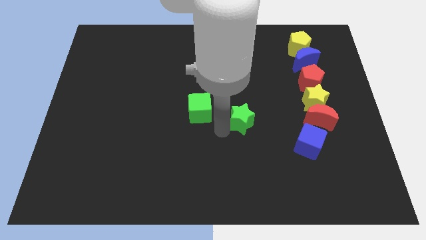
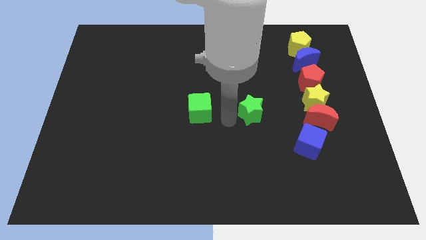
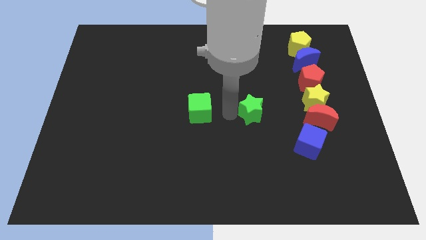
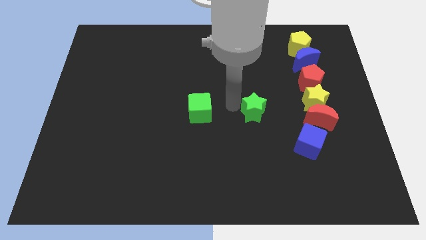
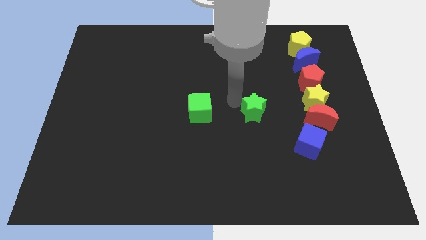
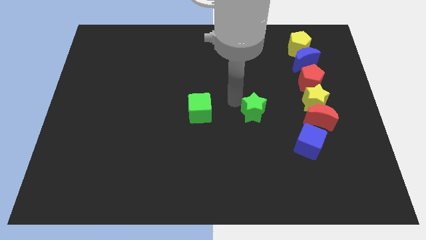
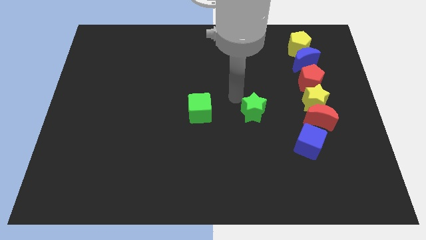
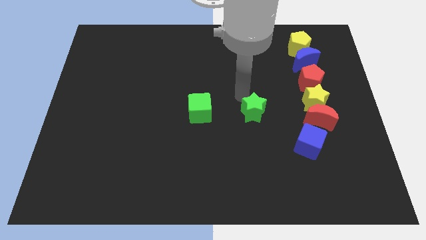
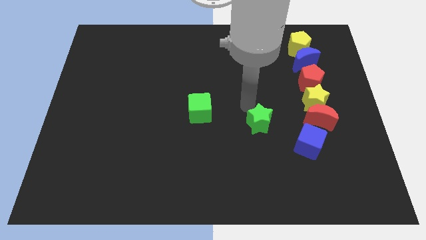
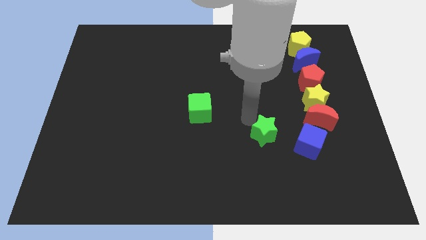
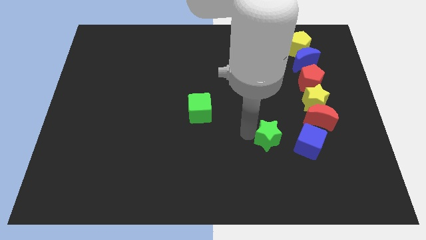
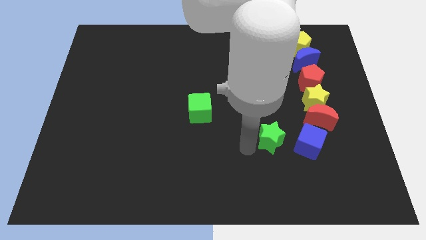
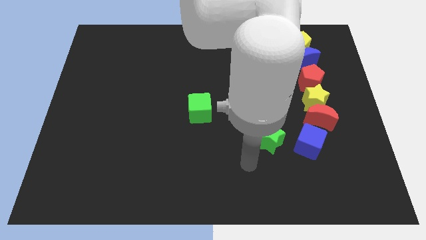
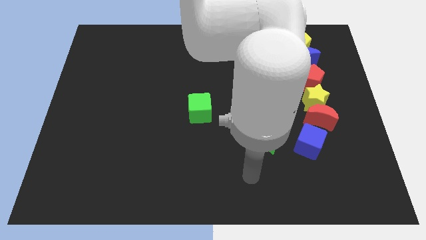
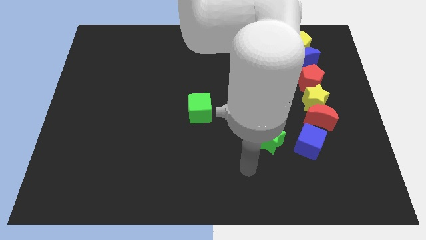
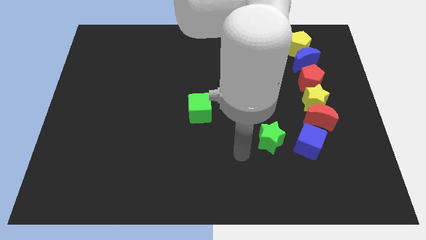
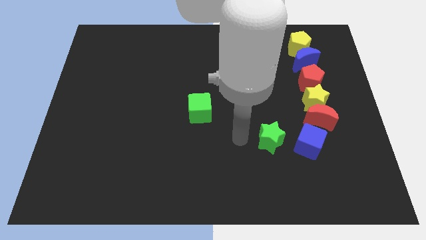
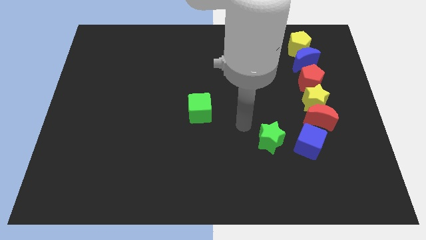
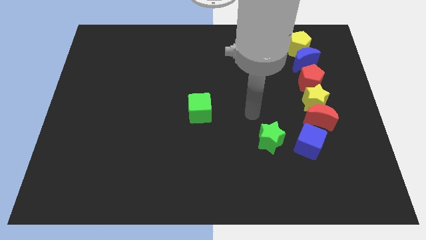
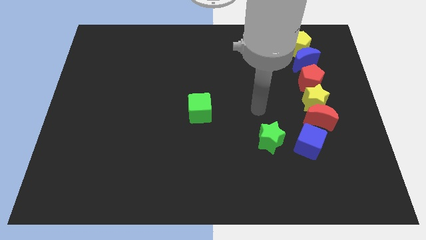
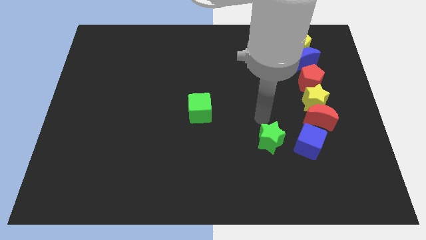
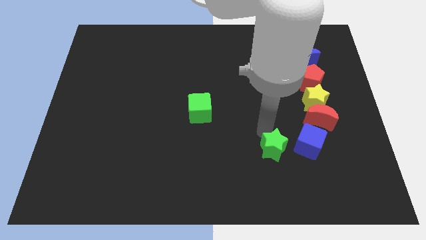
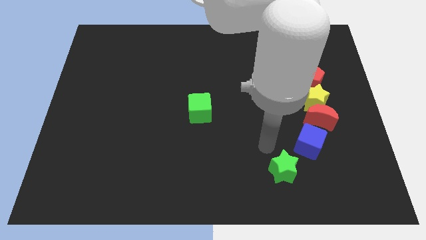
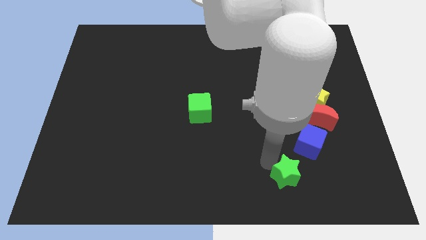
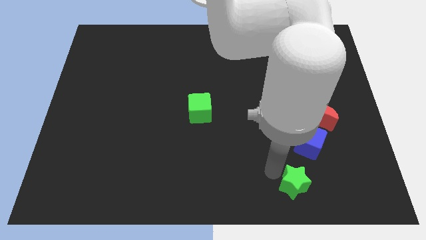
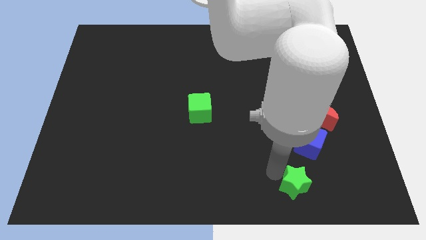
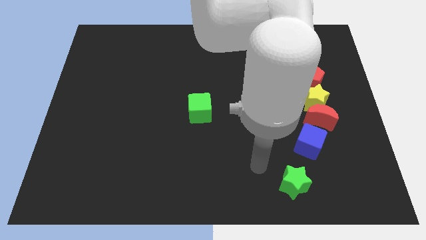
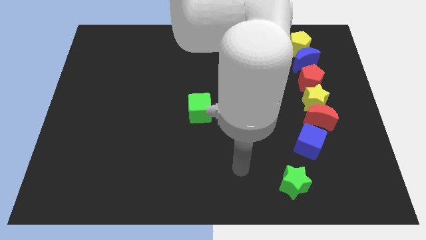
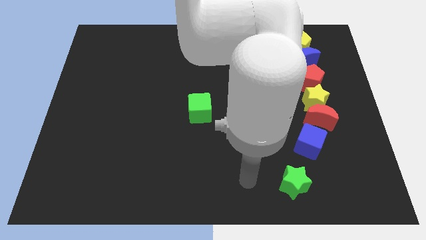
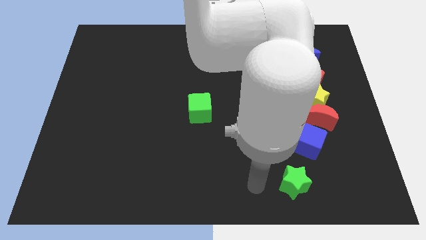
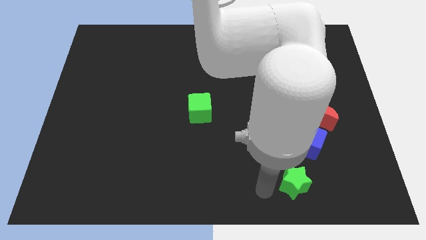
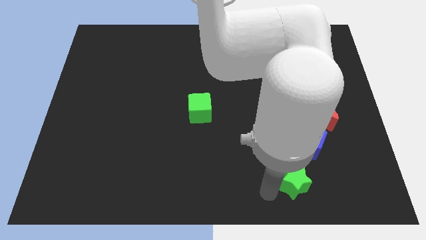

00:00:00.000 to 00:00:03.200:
move the green star to the bottom left of the blue cube

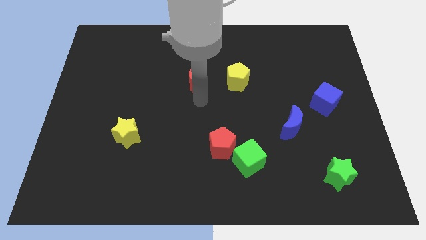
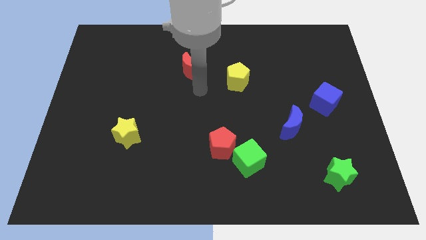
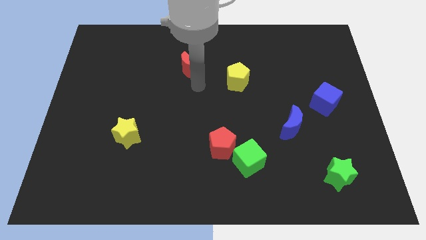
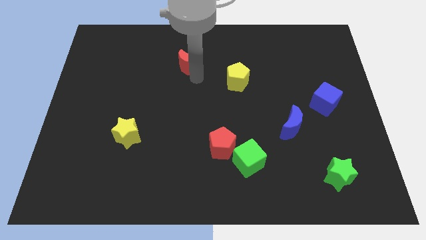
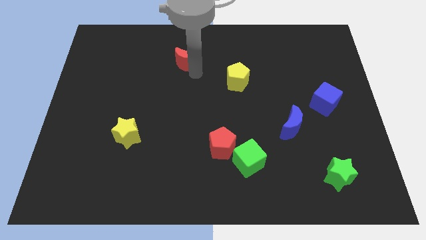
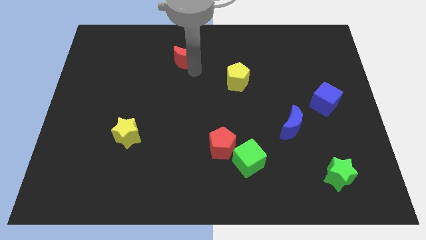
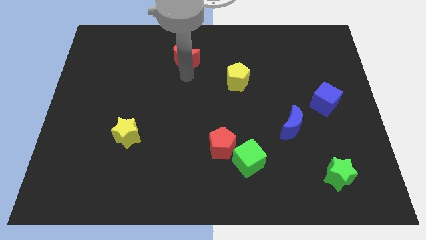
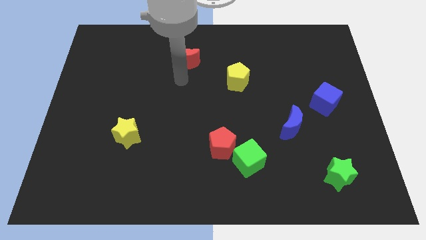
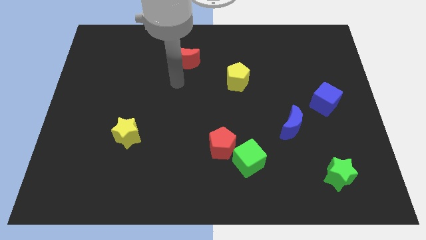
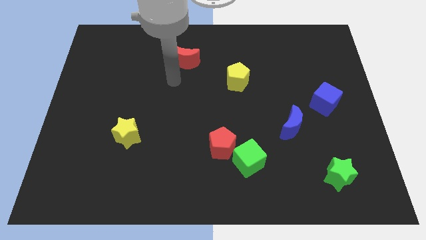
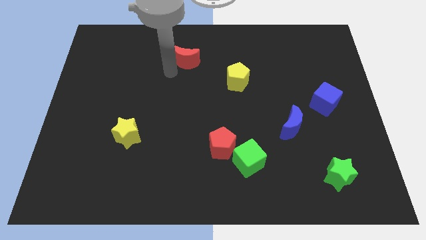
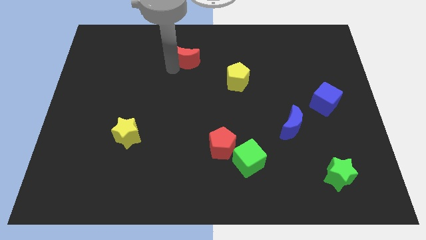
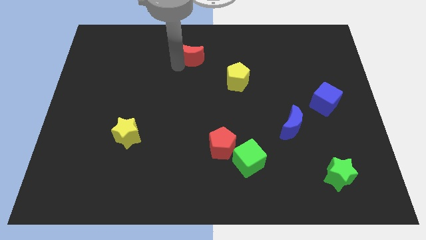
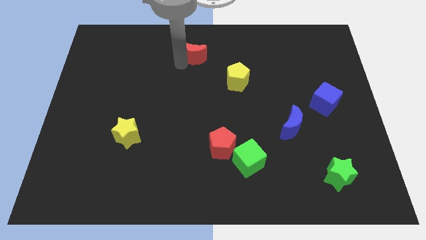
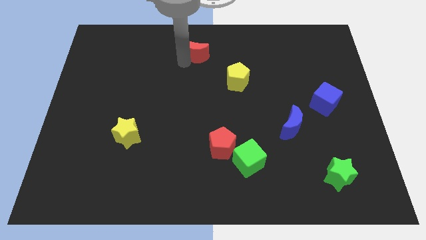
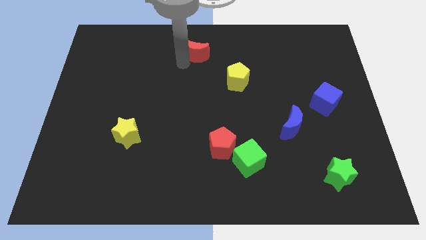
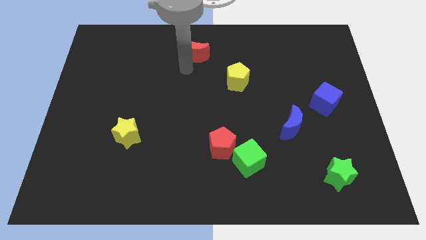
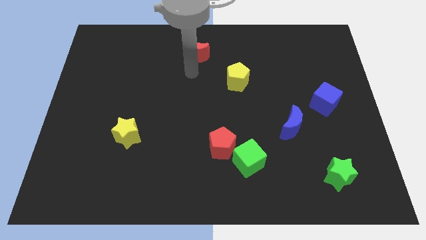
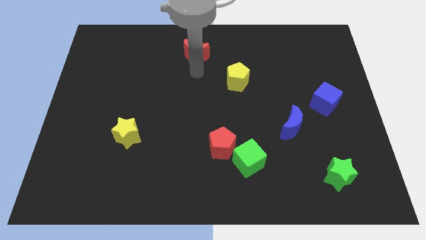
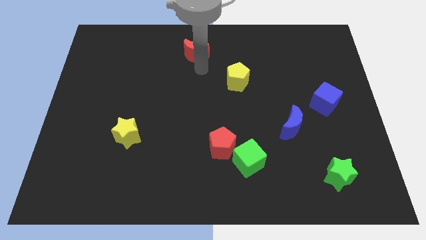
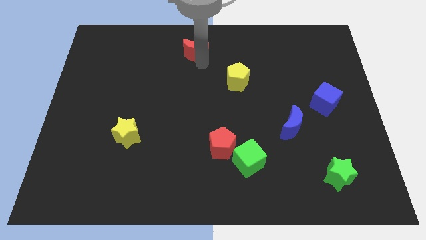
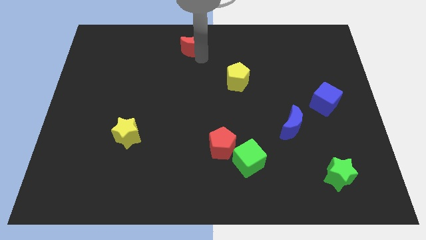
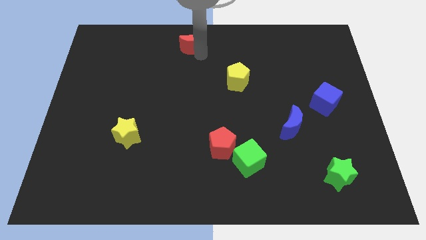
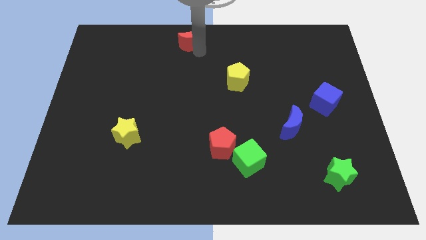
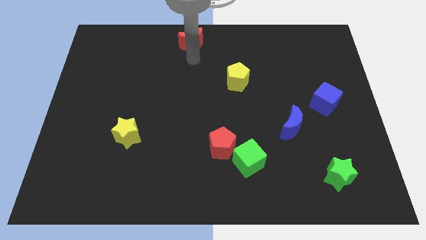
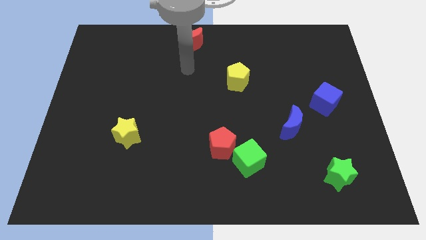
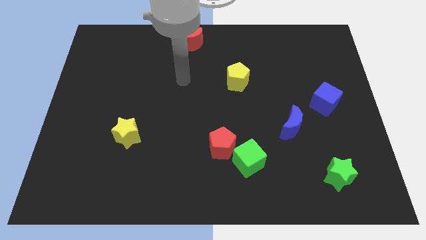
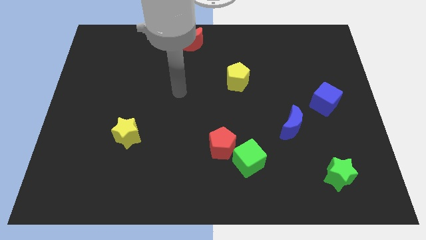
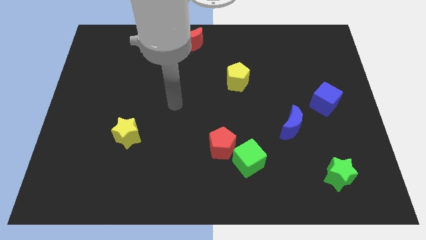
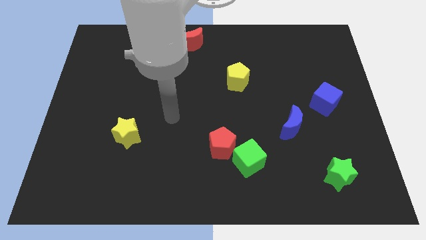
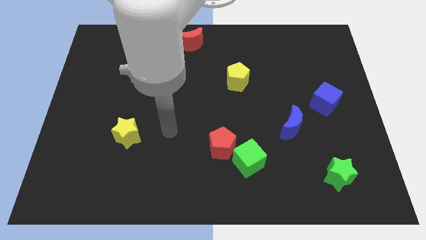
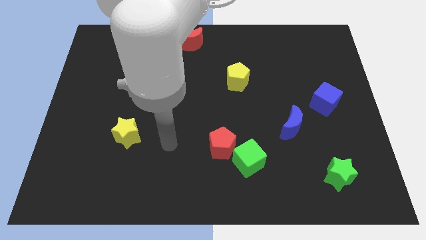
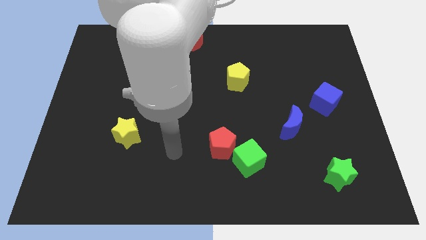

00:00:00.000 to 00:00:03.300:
drag the red crescent towards the top center of the board

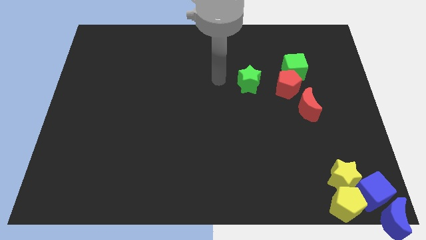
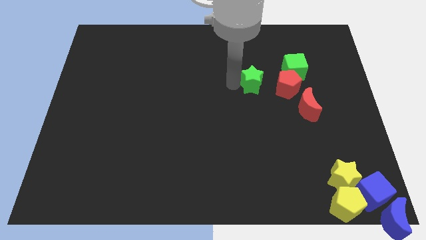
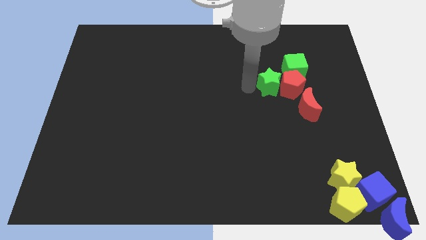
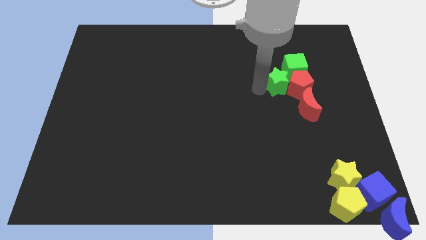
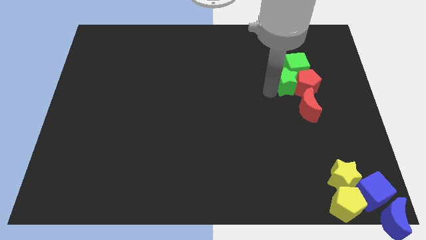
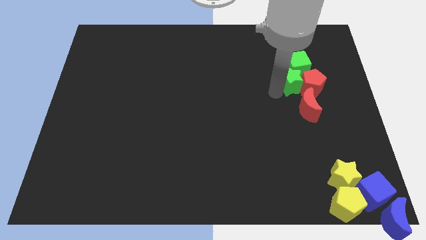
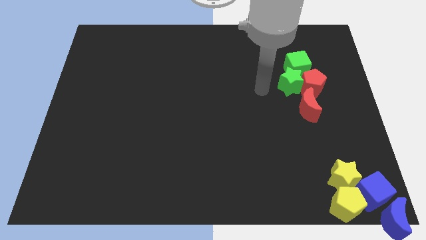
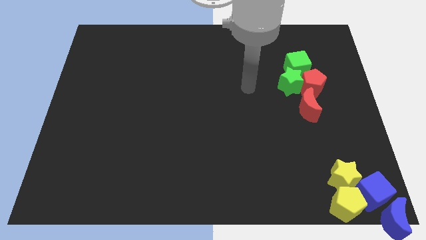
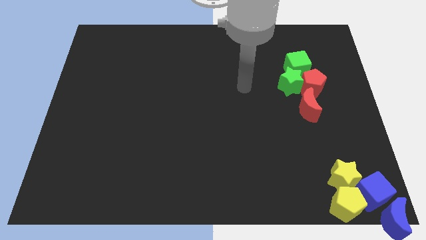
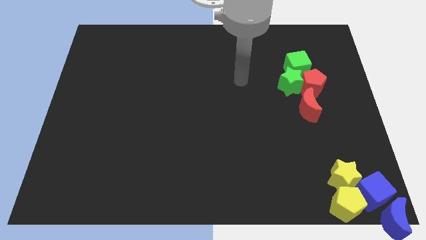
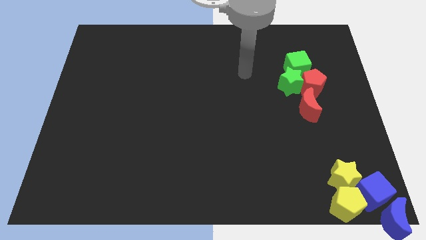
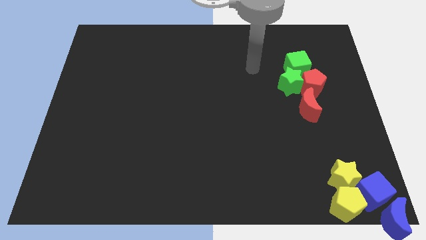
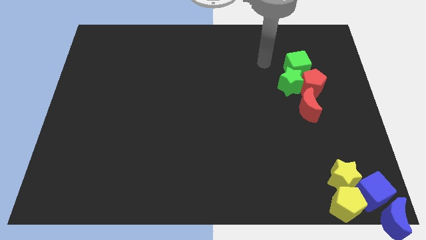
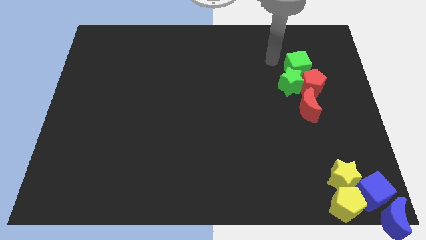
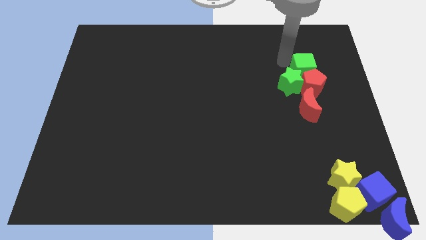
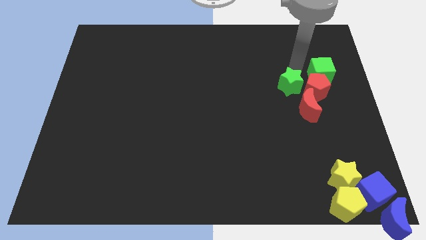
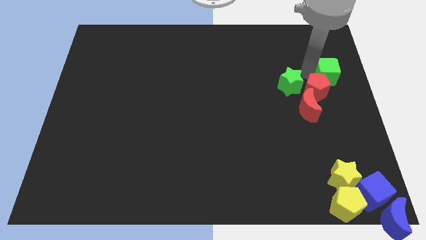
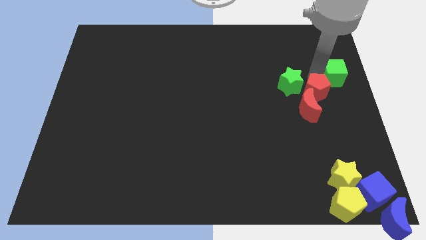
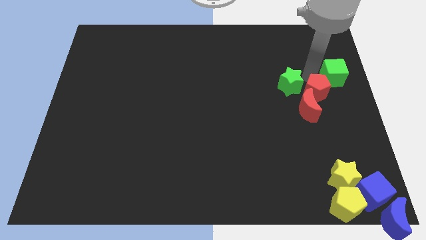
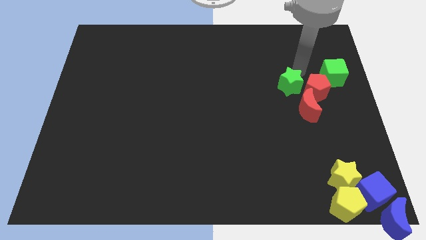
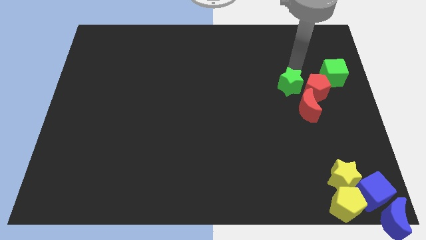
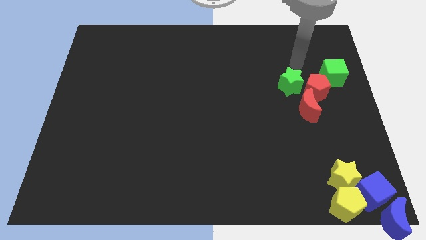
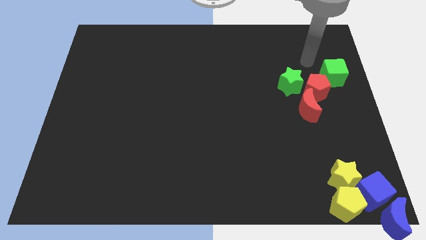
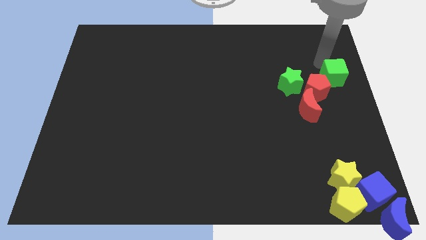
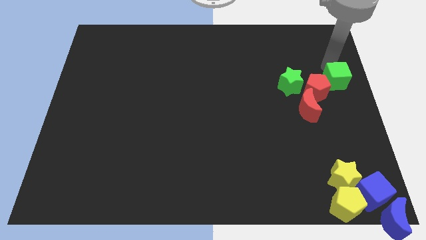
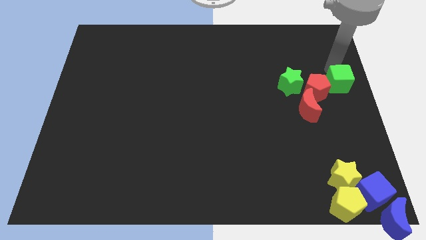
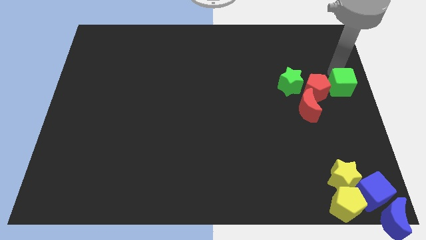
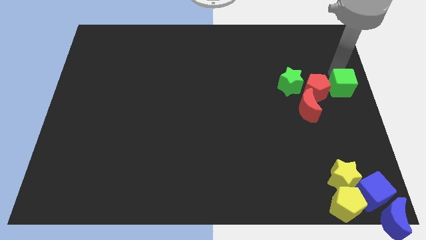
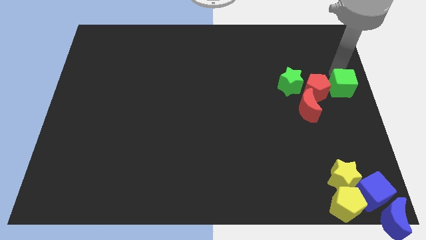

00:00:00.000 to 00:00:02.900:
push the green cube to the right of the red pentagon
